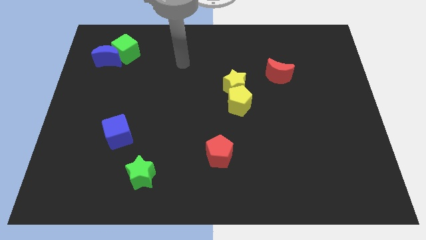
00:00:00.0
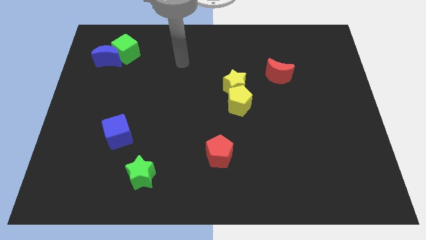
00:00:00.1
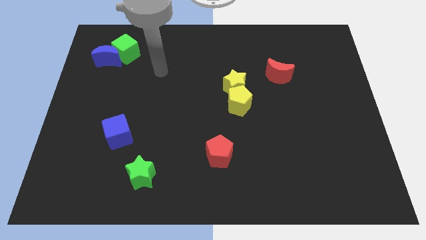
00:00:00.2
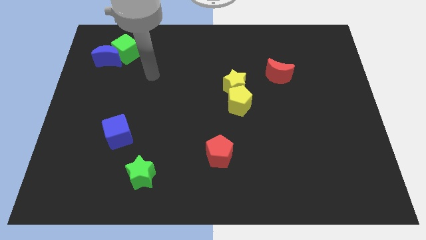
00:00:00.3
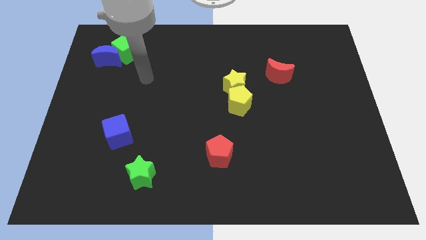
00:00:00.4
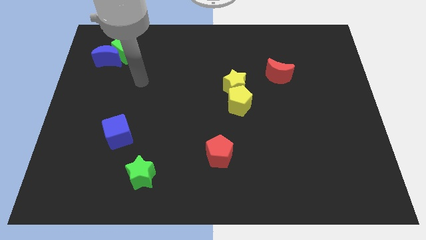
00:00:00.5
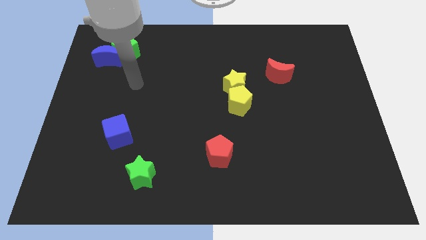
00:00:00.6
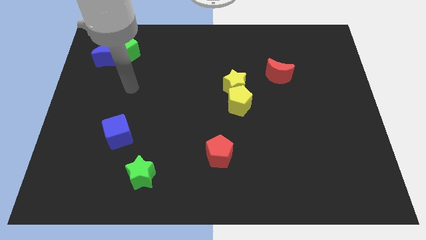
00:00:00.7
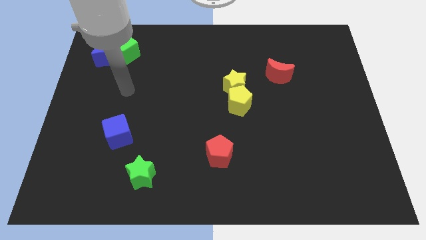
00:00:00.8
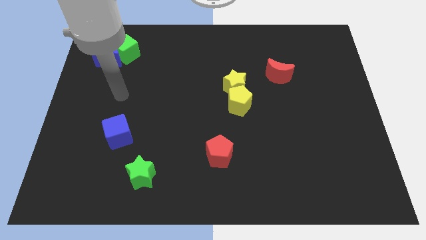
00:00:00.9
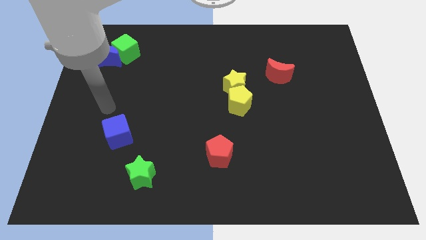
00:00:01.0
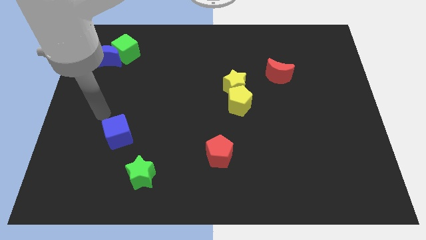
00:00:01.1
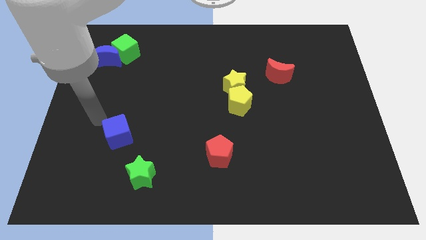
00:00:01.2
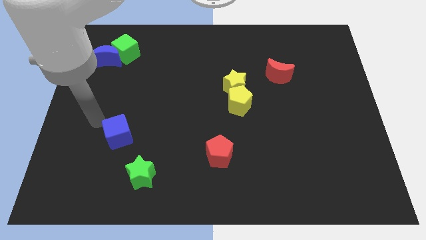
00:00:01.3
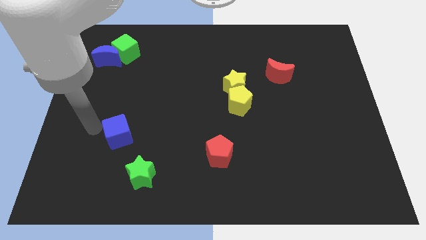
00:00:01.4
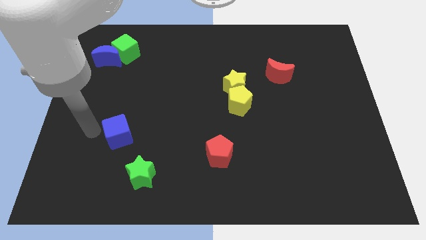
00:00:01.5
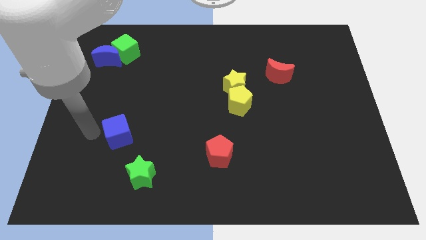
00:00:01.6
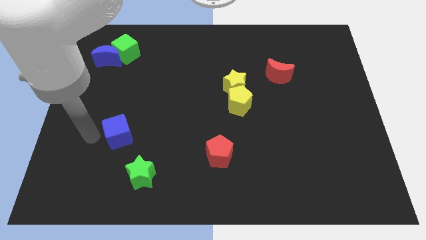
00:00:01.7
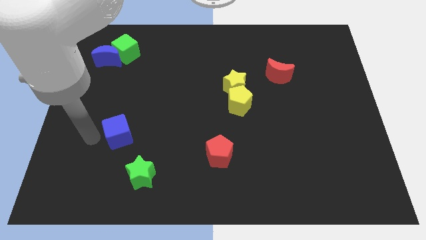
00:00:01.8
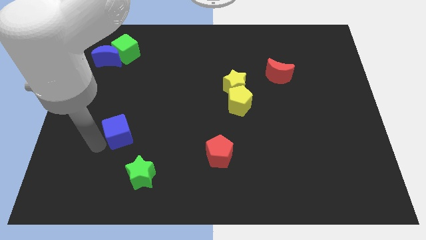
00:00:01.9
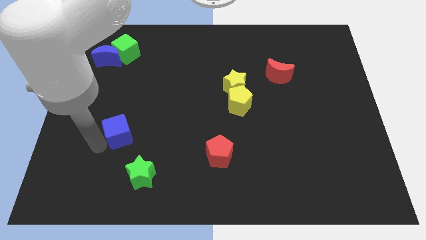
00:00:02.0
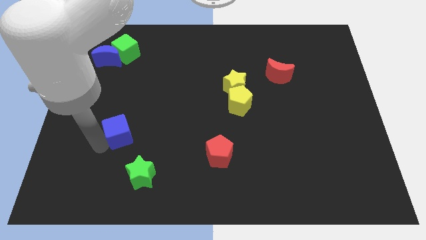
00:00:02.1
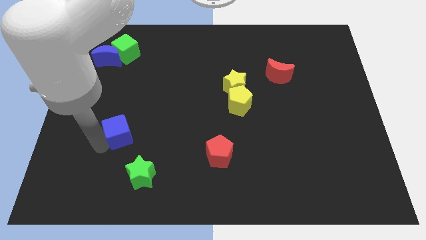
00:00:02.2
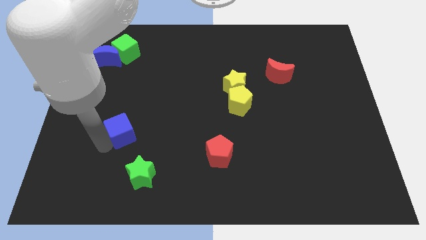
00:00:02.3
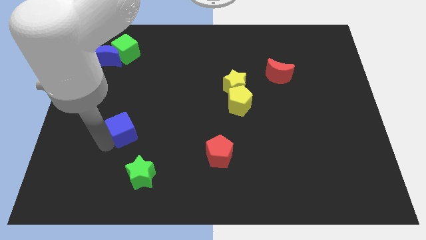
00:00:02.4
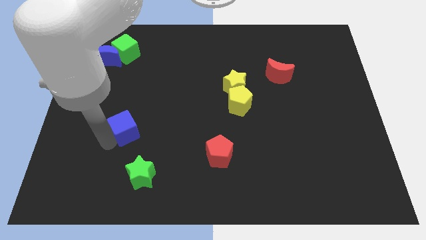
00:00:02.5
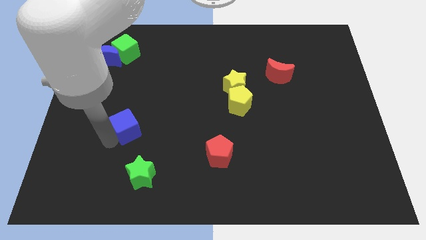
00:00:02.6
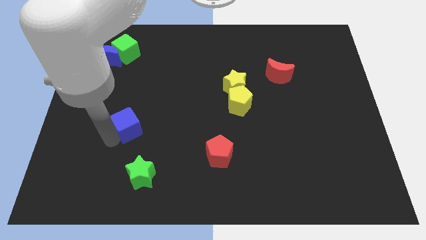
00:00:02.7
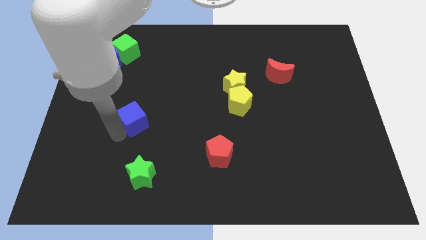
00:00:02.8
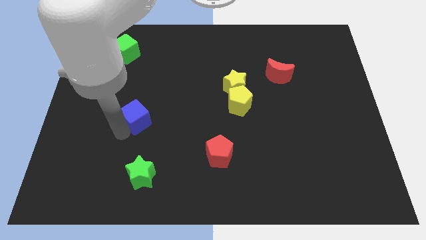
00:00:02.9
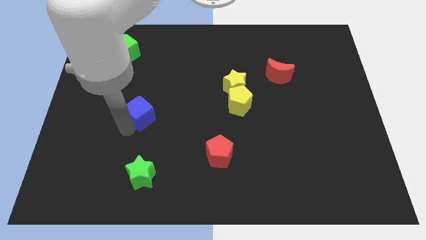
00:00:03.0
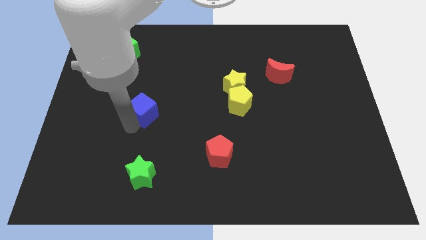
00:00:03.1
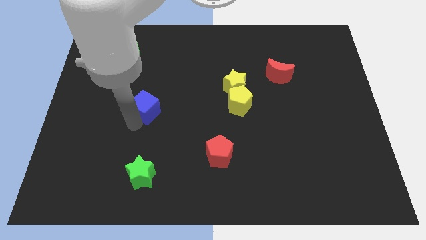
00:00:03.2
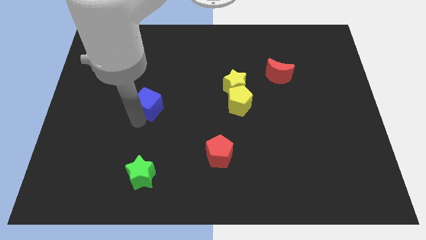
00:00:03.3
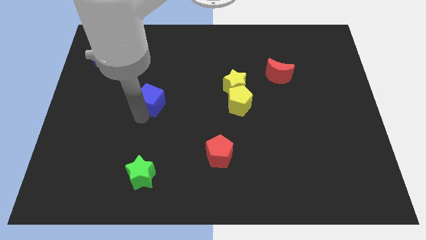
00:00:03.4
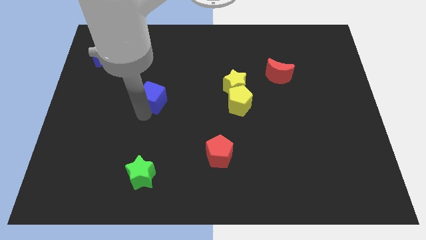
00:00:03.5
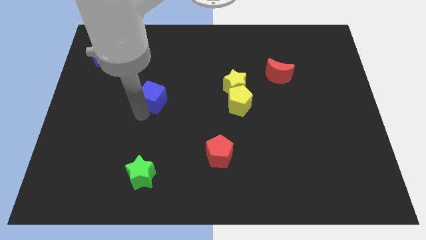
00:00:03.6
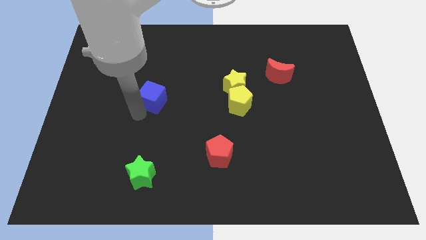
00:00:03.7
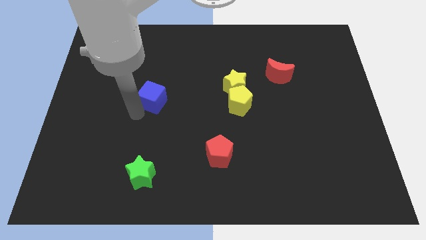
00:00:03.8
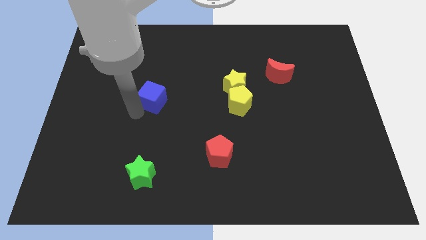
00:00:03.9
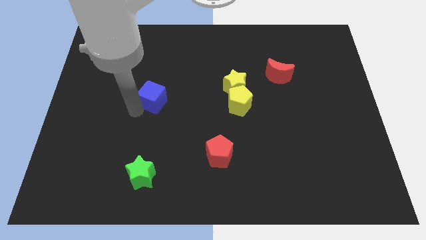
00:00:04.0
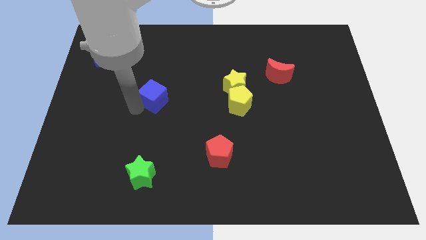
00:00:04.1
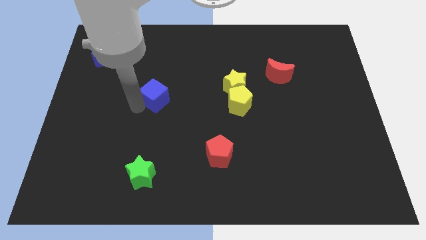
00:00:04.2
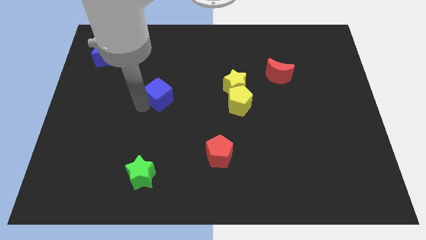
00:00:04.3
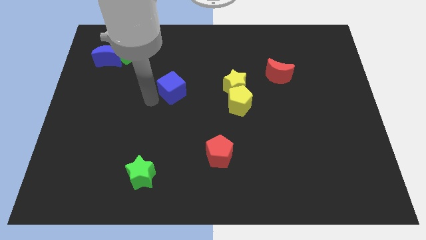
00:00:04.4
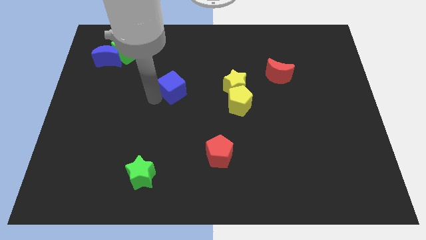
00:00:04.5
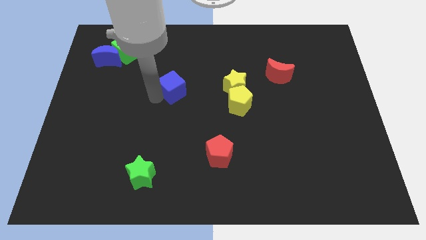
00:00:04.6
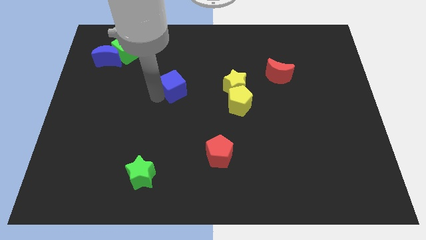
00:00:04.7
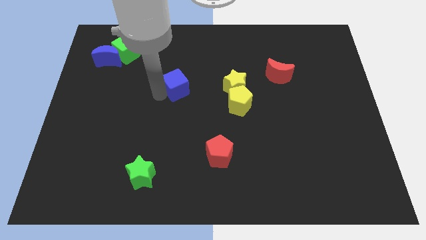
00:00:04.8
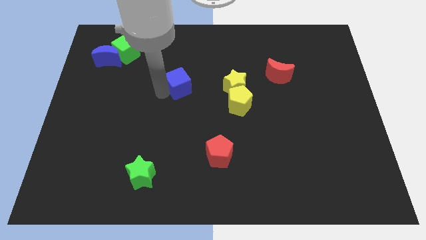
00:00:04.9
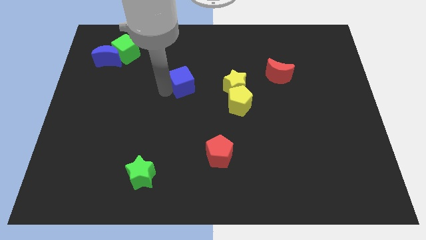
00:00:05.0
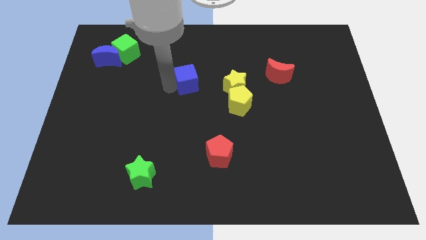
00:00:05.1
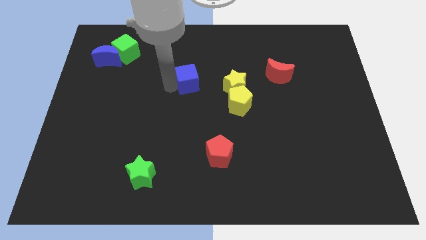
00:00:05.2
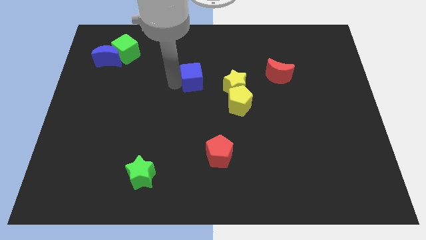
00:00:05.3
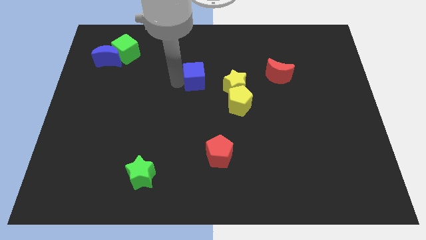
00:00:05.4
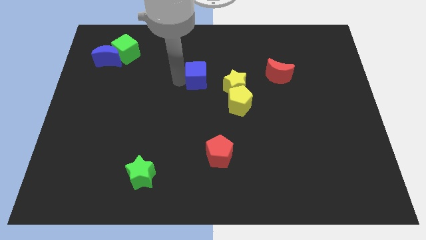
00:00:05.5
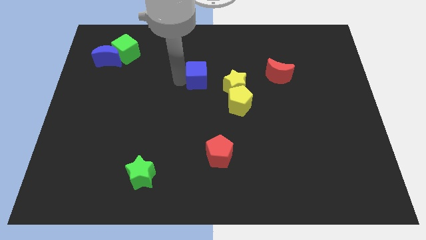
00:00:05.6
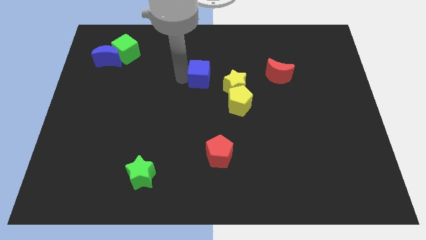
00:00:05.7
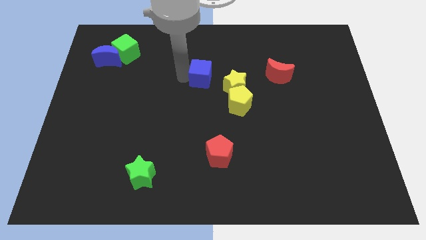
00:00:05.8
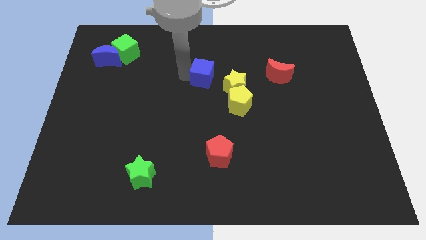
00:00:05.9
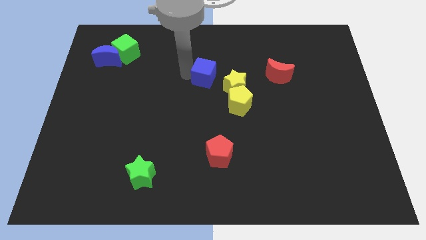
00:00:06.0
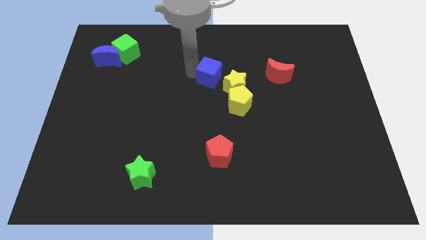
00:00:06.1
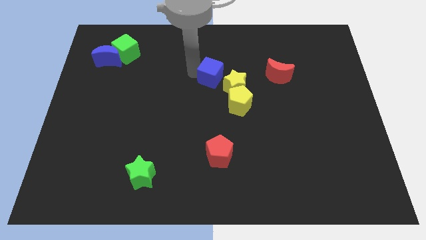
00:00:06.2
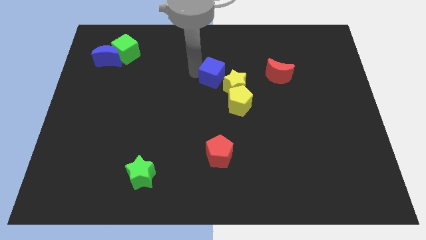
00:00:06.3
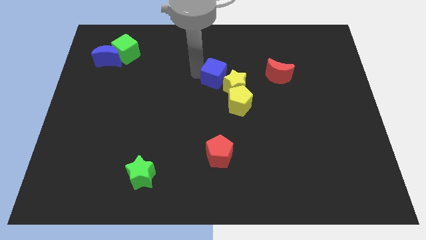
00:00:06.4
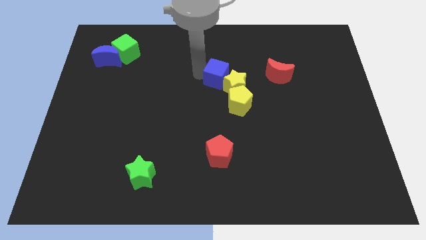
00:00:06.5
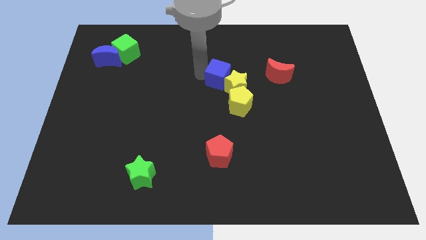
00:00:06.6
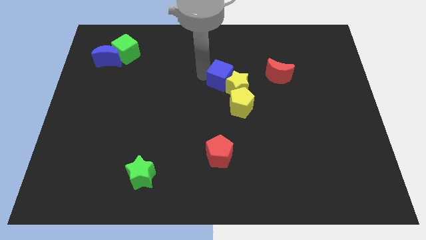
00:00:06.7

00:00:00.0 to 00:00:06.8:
move the blue cube next to the yellow star

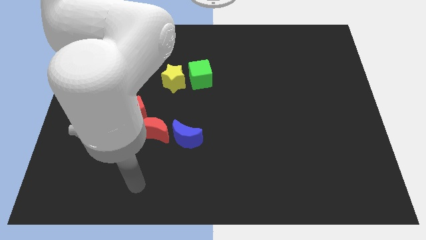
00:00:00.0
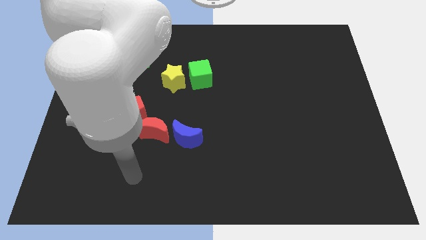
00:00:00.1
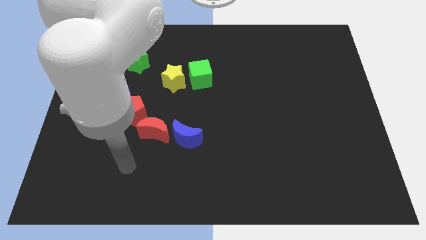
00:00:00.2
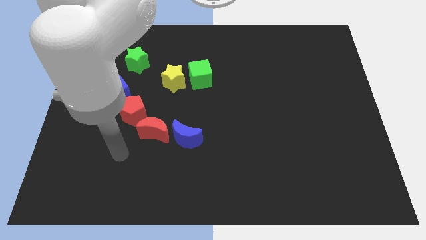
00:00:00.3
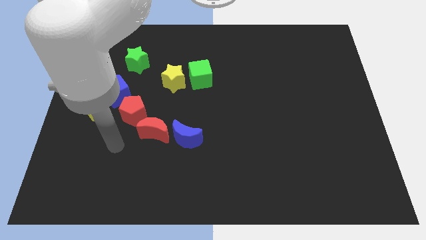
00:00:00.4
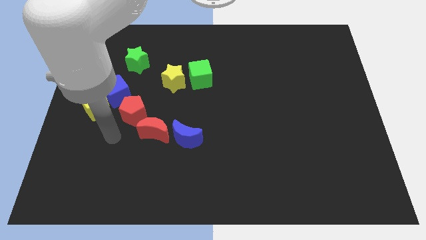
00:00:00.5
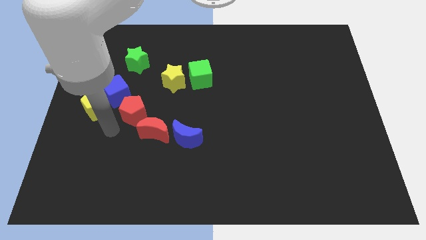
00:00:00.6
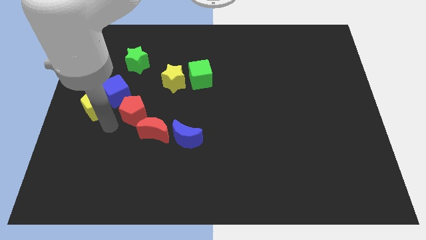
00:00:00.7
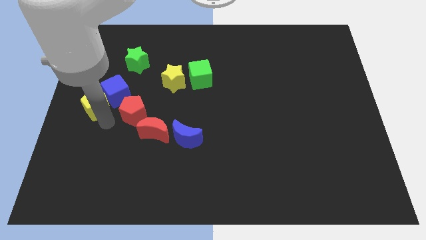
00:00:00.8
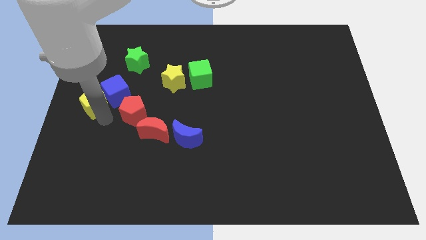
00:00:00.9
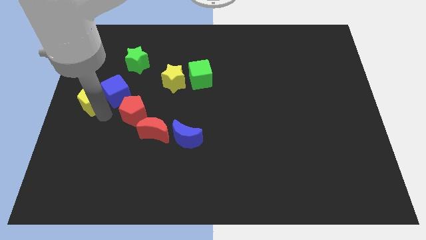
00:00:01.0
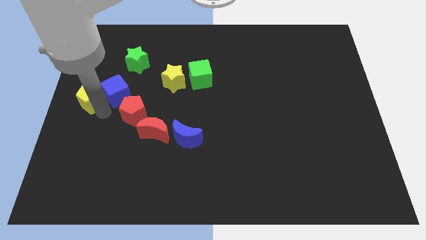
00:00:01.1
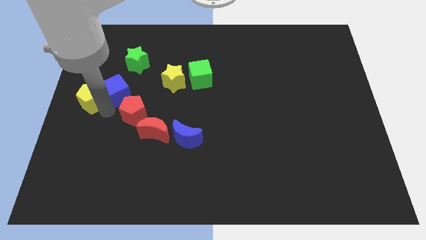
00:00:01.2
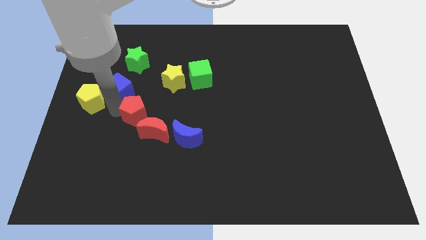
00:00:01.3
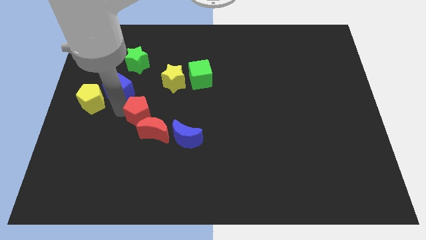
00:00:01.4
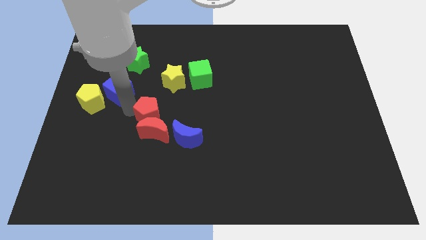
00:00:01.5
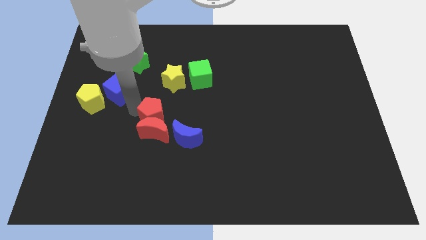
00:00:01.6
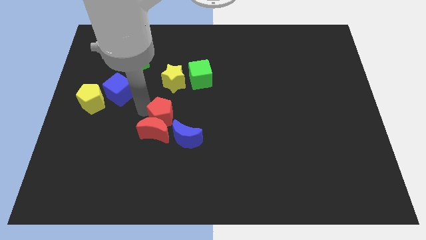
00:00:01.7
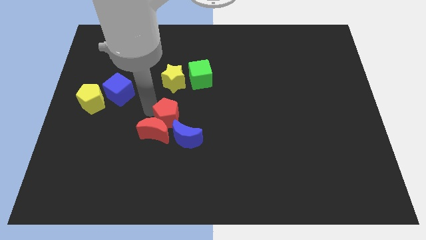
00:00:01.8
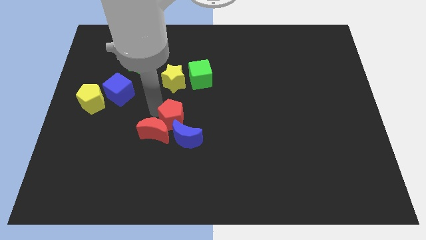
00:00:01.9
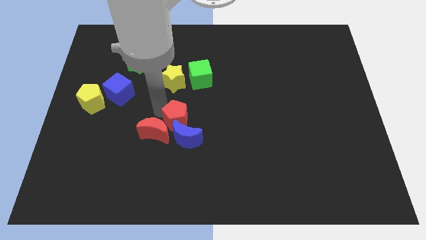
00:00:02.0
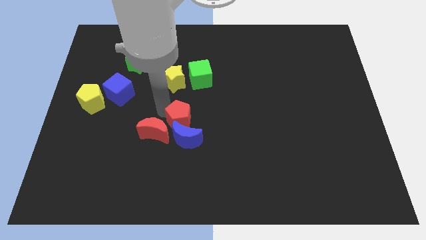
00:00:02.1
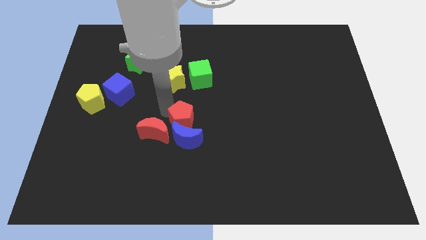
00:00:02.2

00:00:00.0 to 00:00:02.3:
push the red pentagon towards the blue moon
